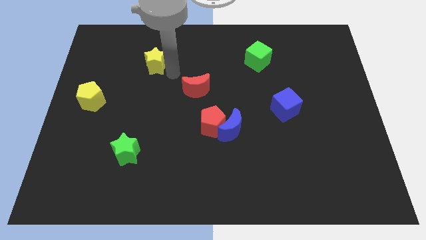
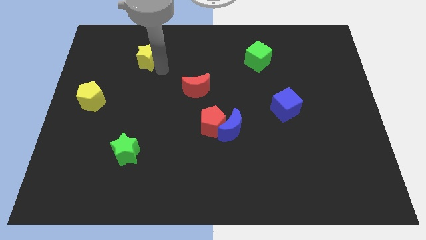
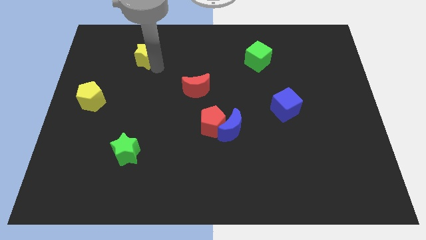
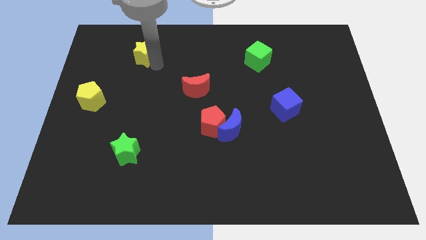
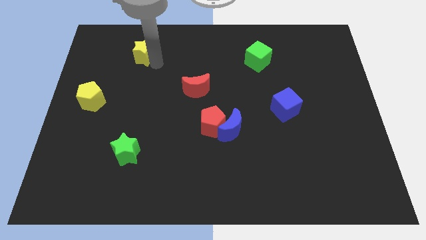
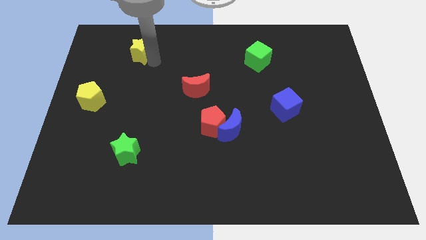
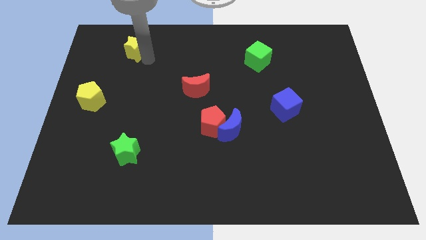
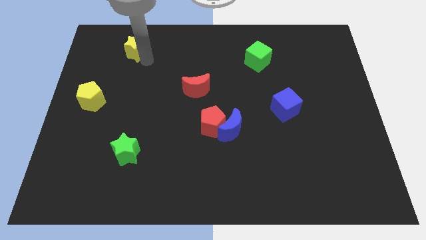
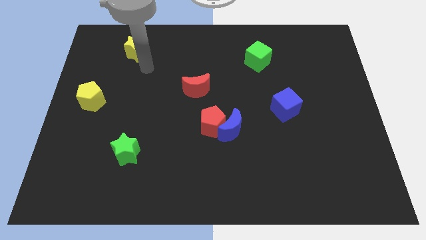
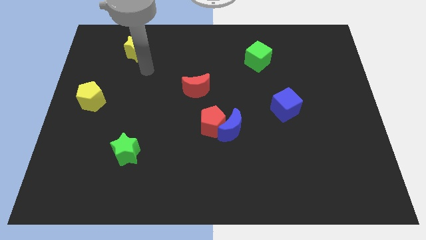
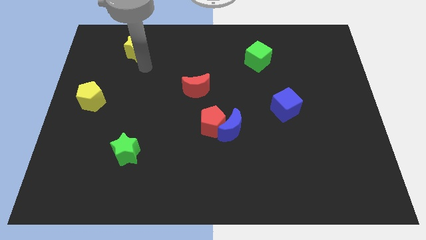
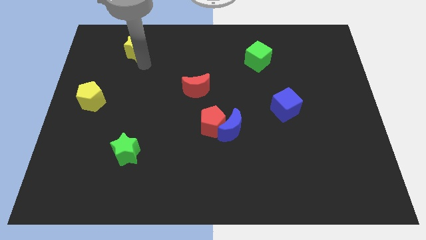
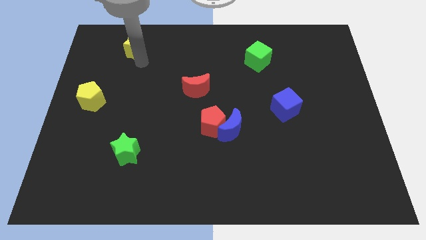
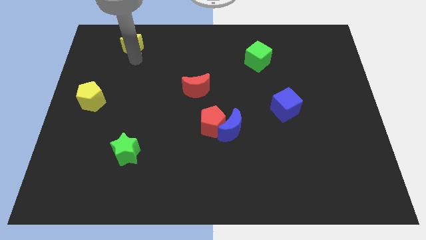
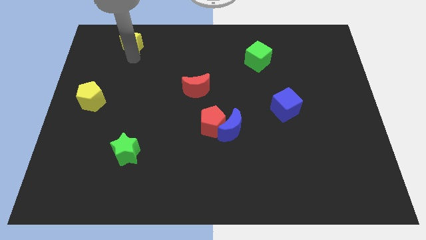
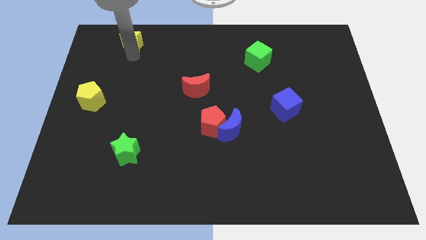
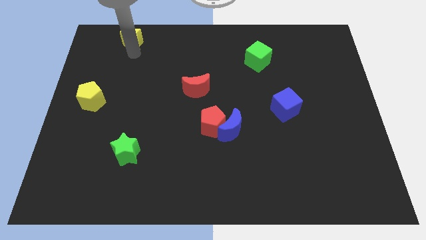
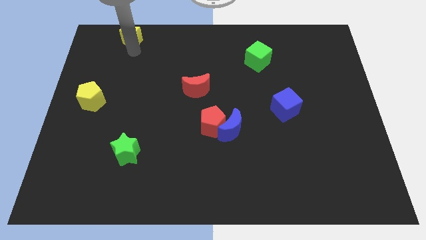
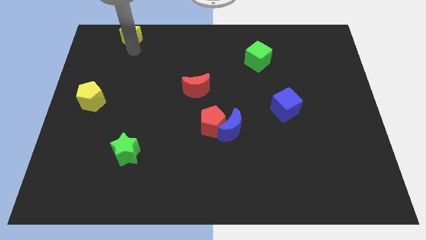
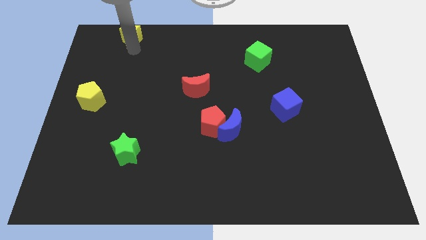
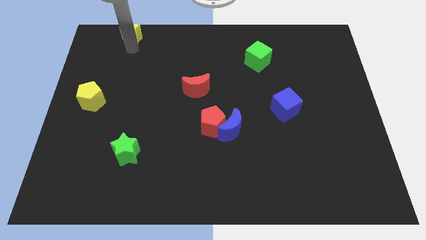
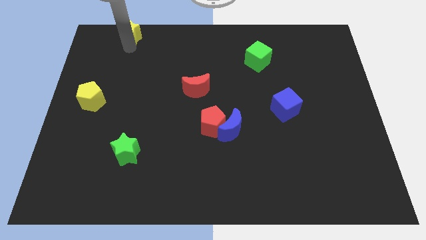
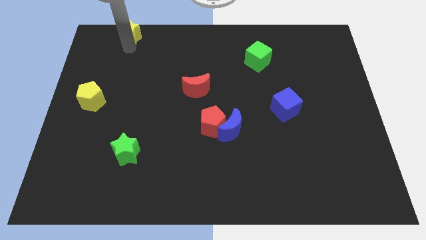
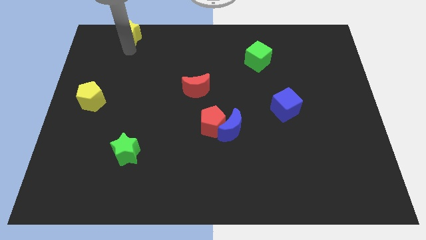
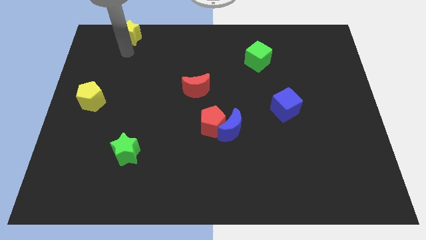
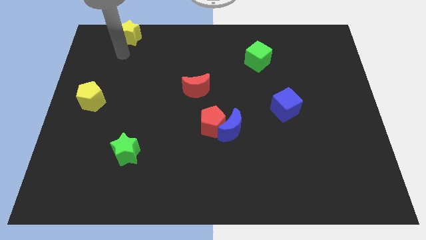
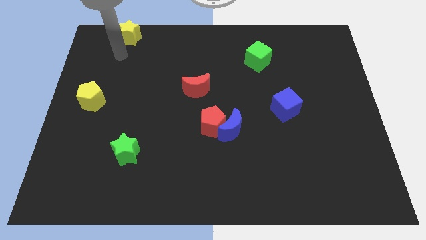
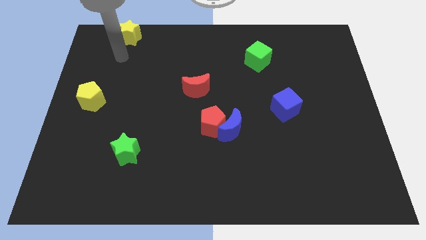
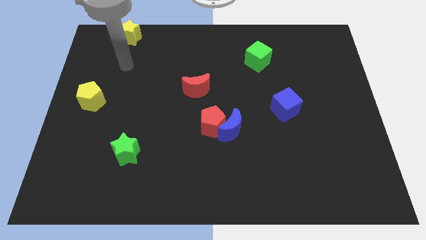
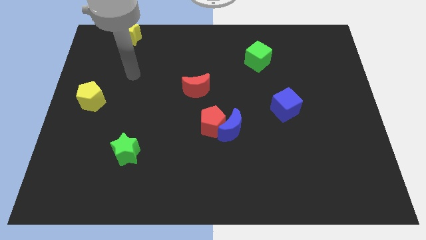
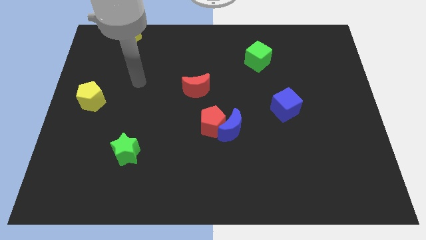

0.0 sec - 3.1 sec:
slide yellow star towards top left

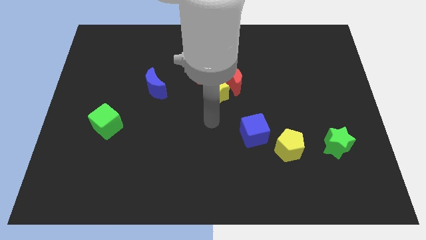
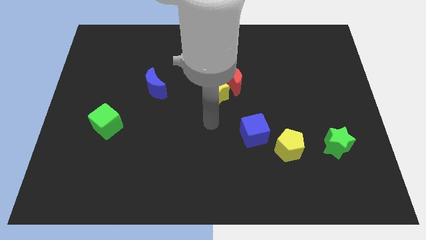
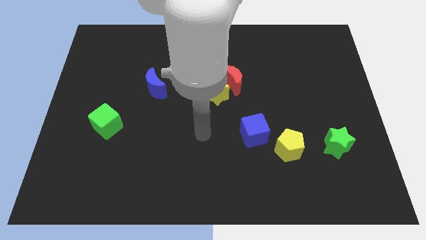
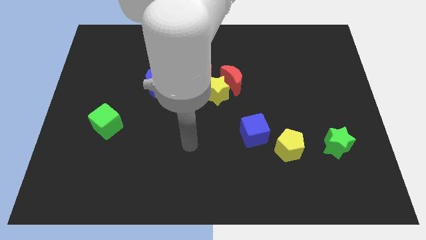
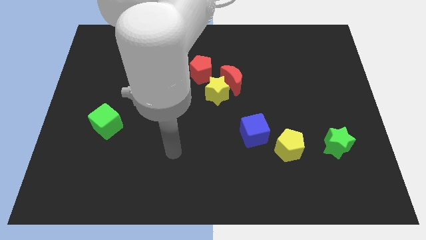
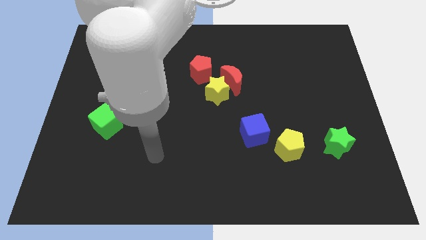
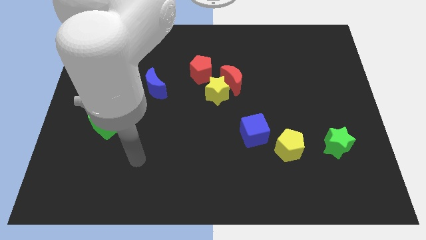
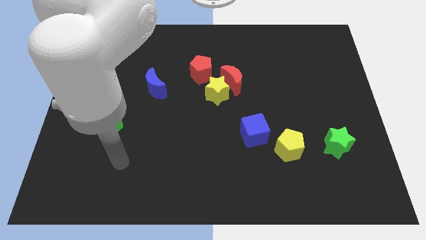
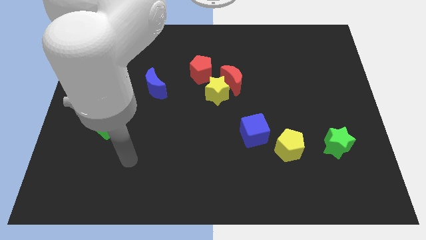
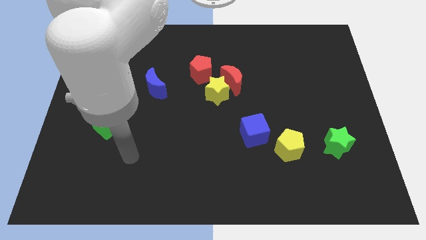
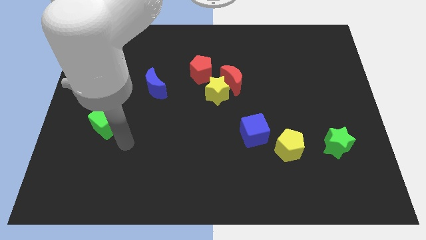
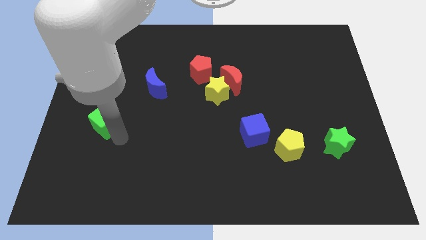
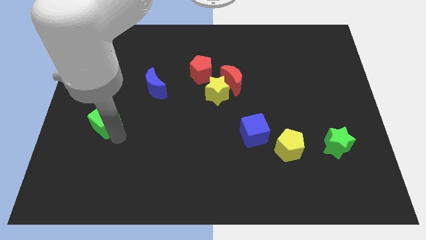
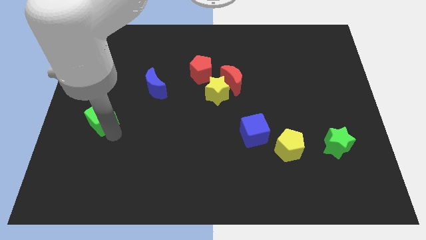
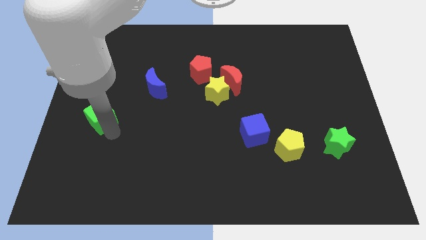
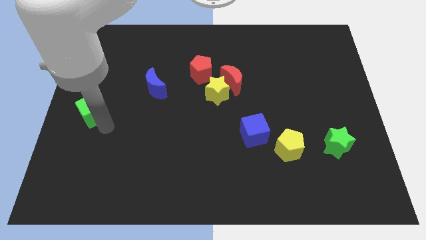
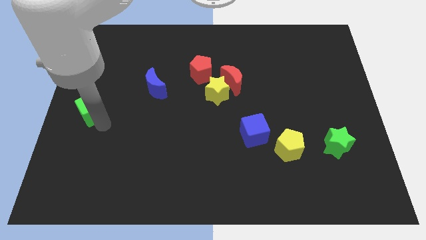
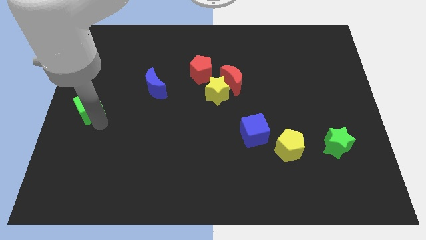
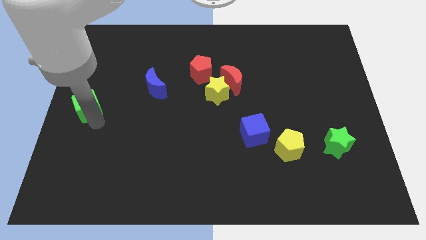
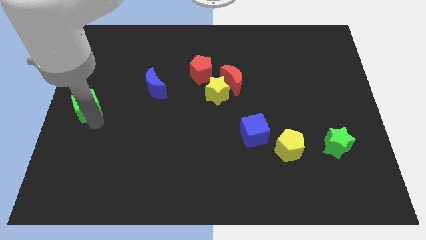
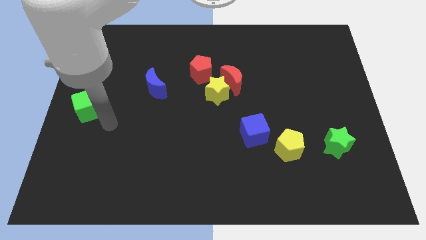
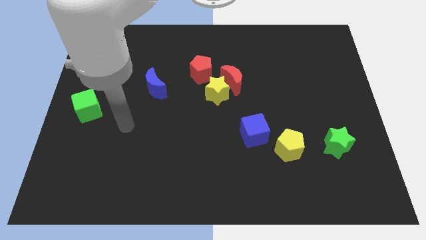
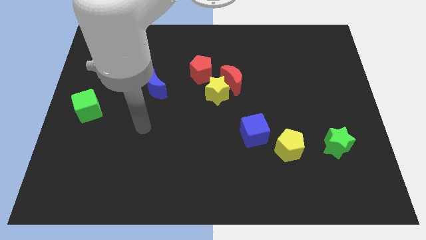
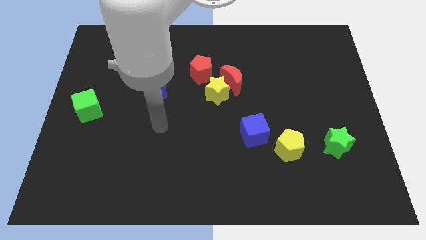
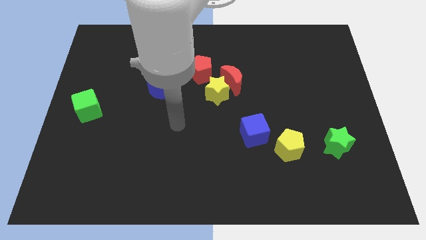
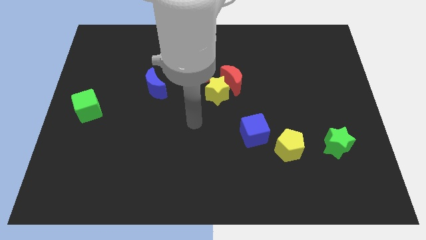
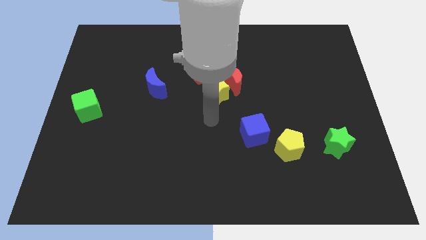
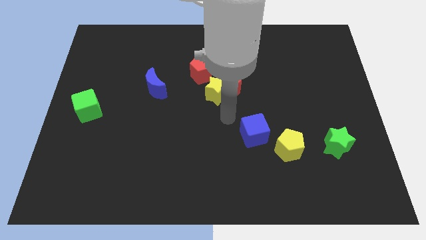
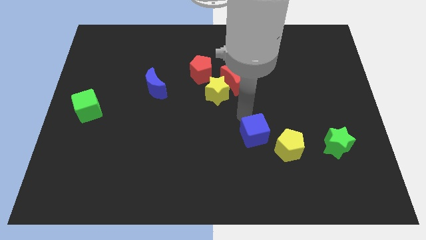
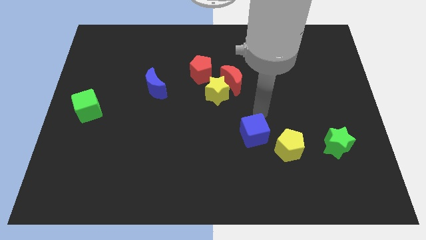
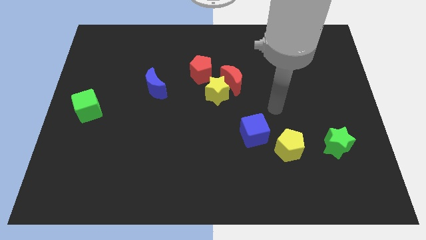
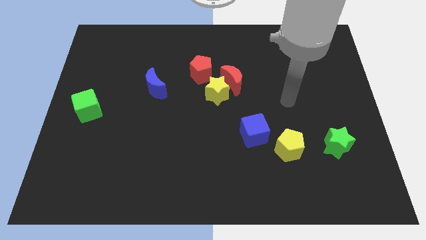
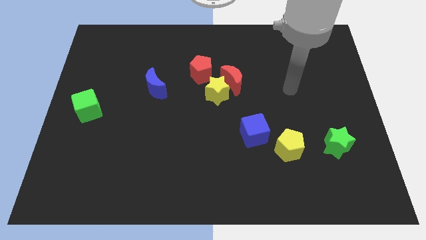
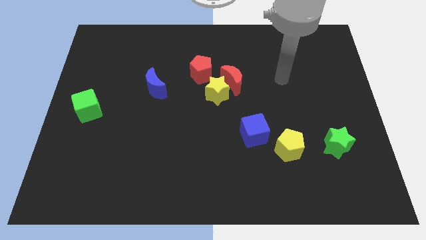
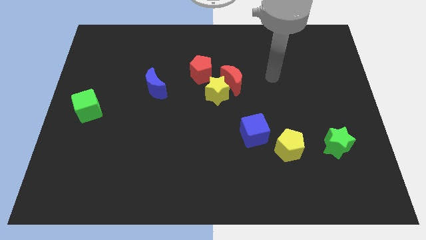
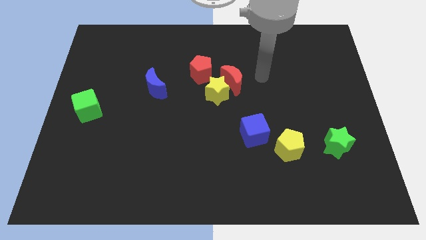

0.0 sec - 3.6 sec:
move the green cube to the left center of the board

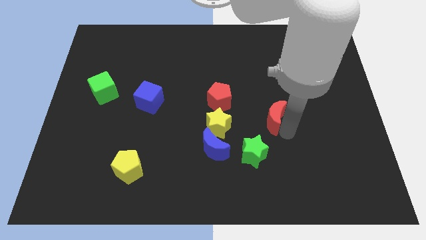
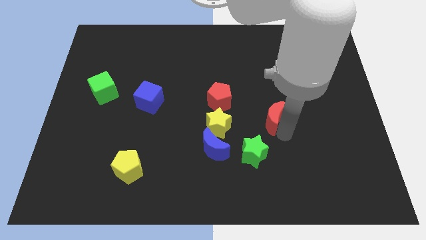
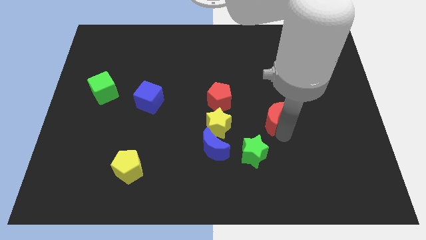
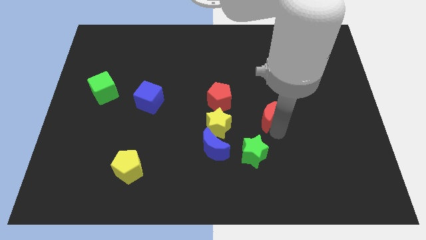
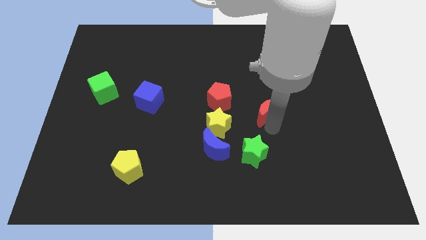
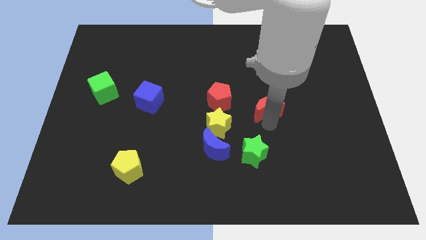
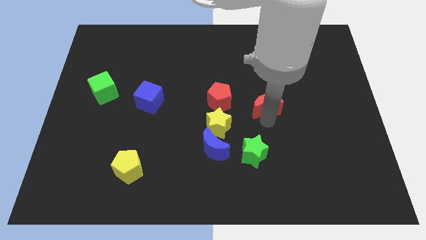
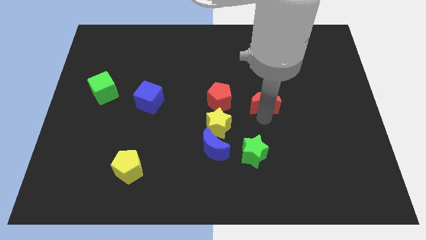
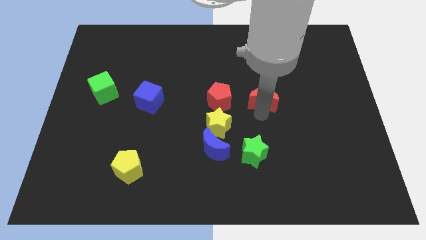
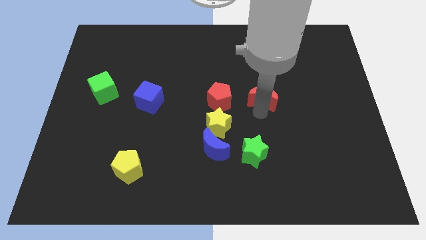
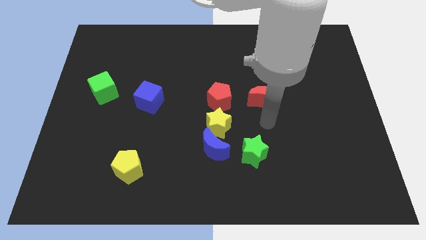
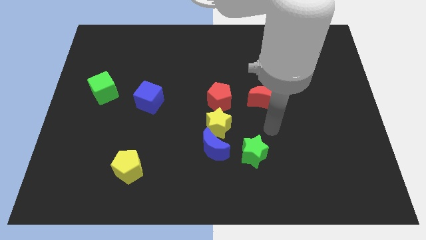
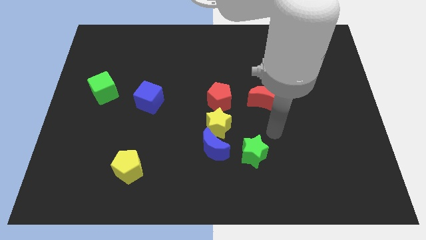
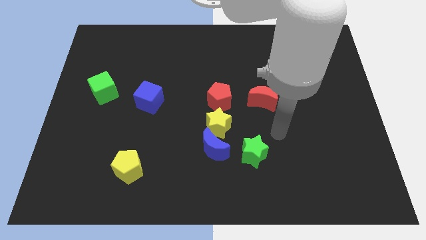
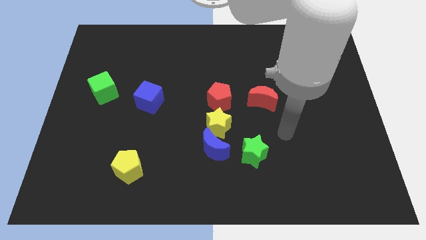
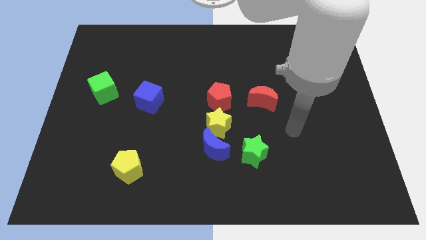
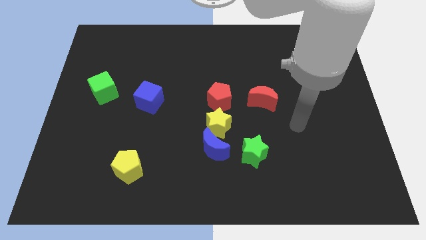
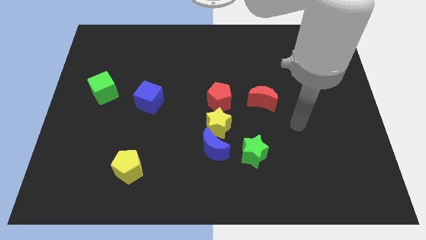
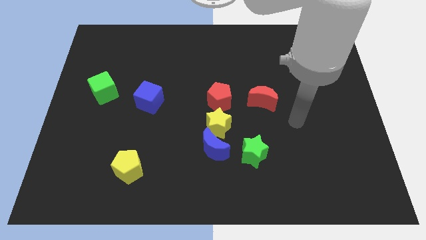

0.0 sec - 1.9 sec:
move red moon to the top of green star

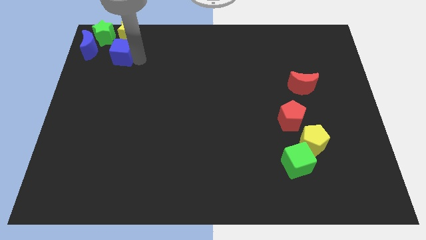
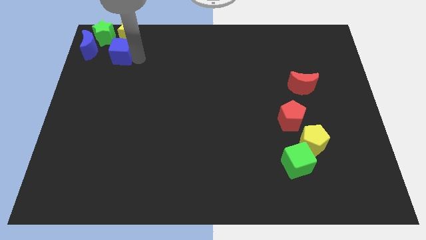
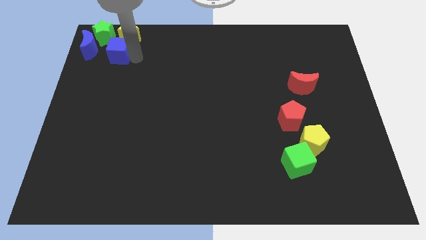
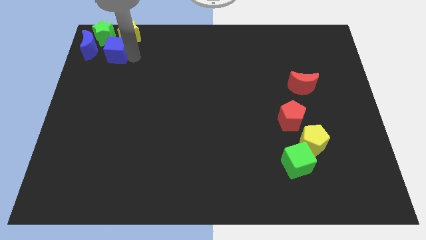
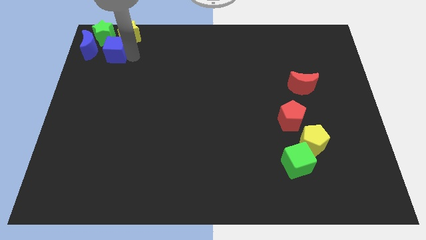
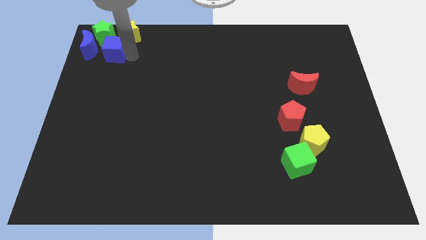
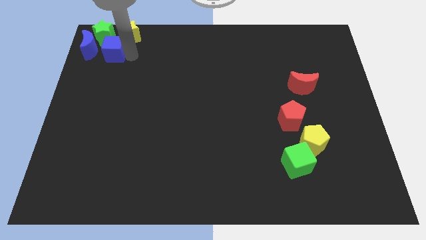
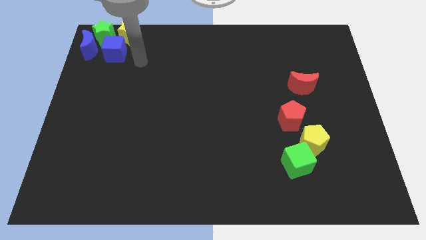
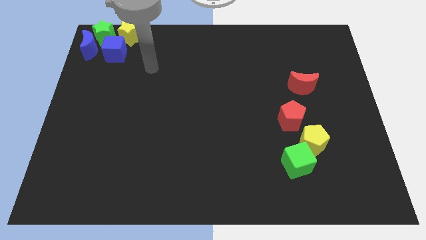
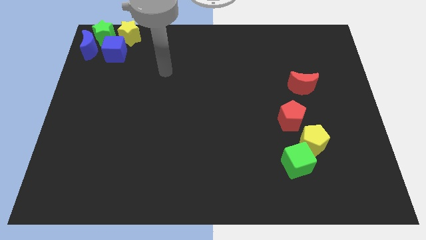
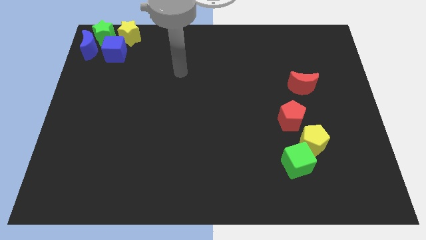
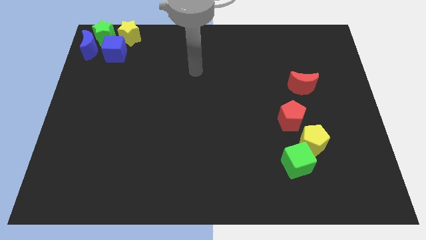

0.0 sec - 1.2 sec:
place blue cube to the bottom left of yellow star
